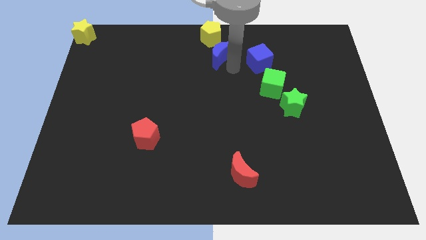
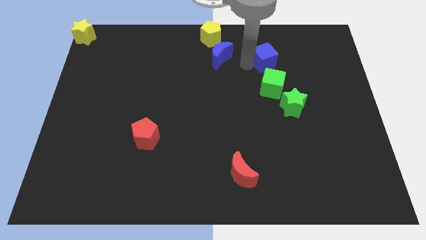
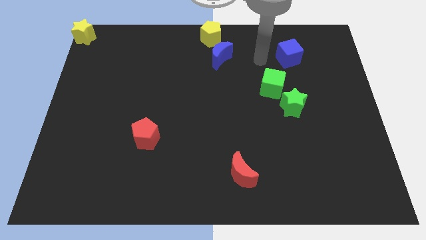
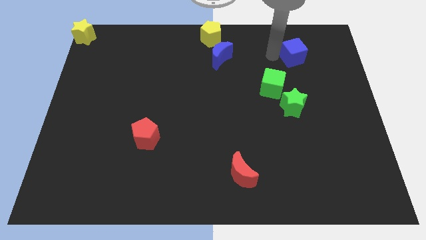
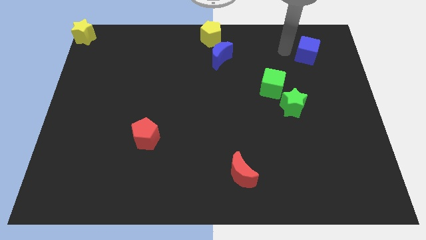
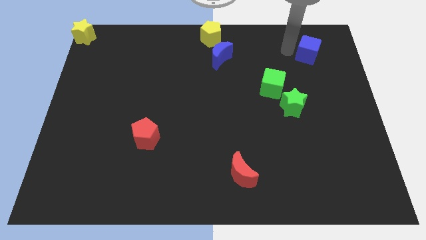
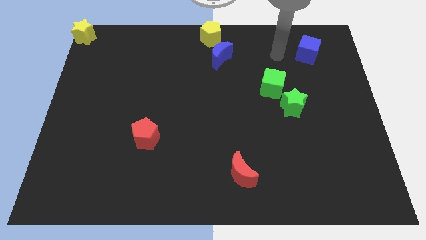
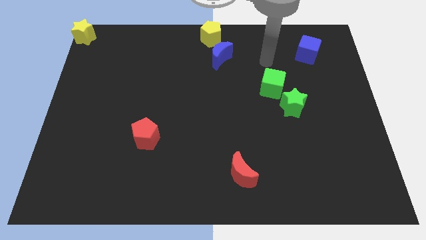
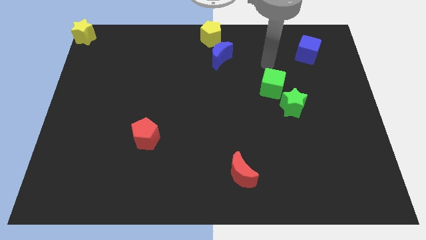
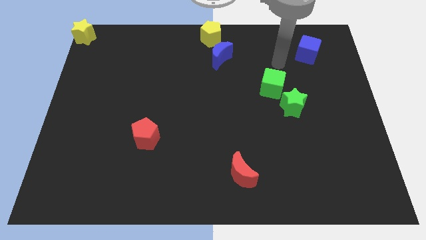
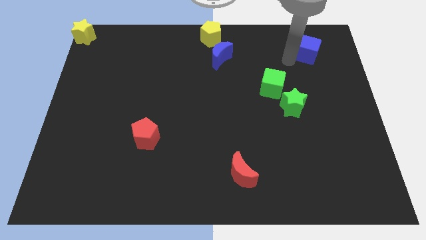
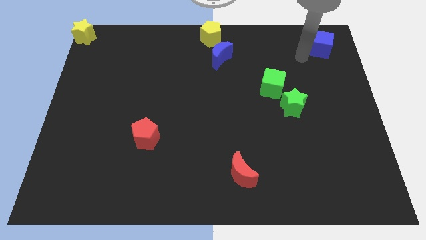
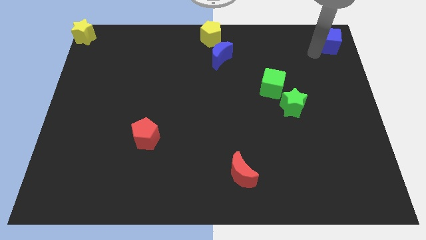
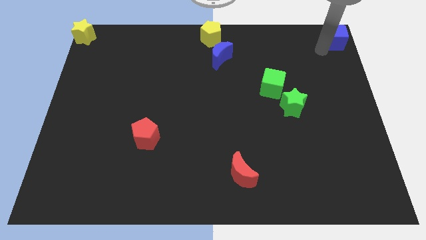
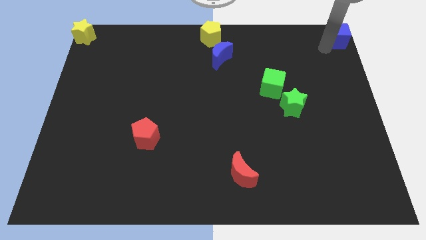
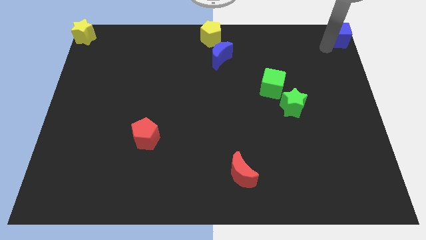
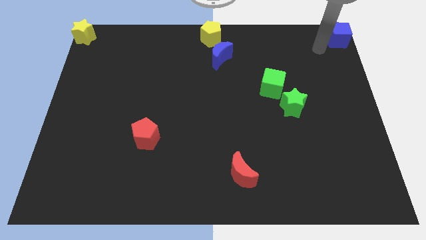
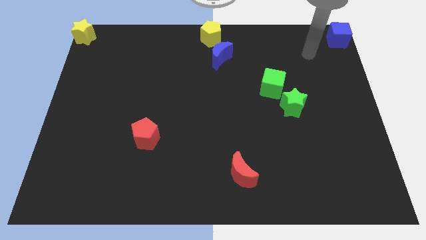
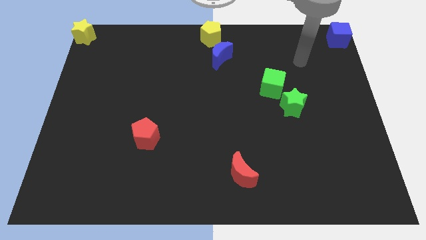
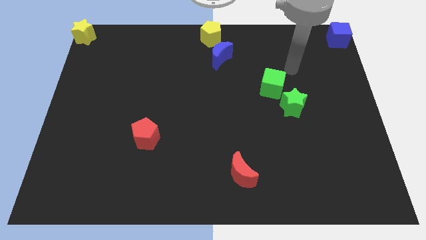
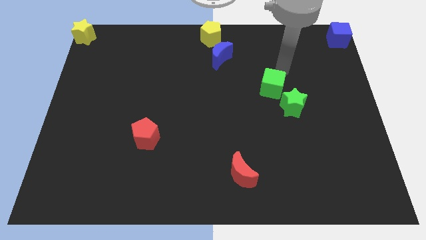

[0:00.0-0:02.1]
move the blue cube to the top right corner of the board

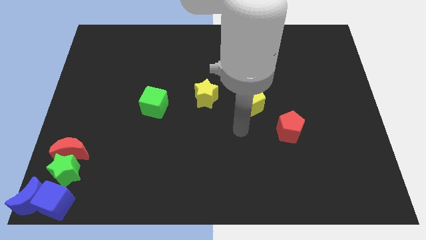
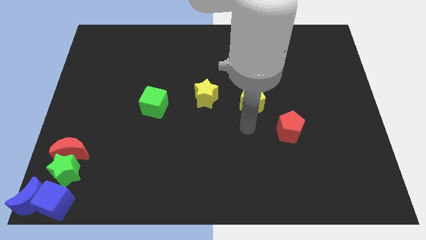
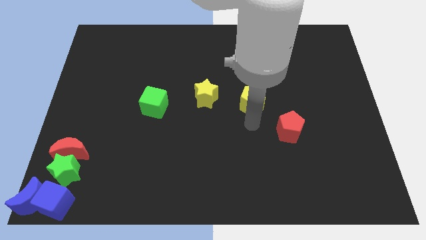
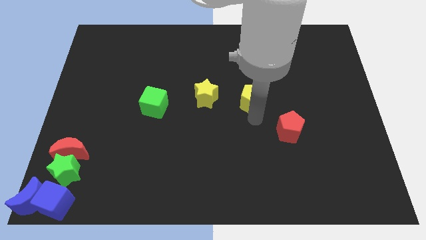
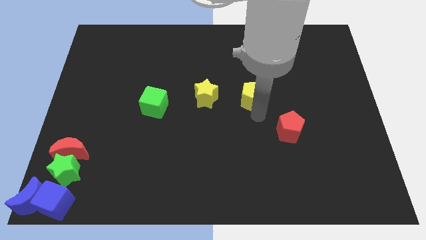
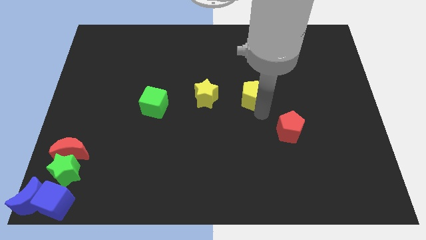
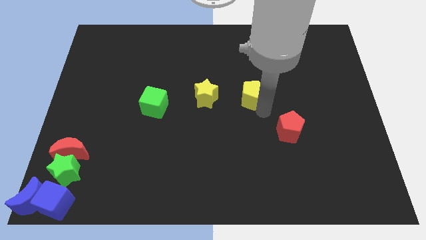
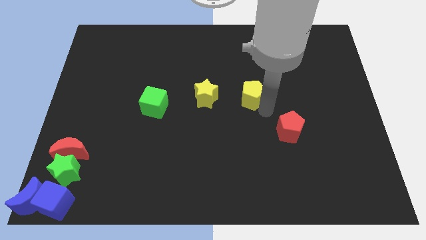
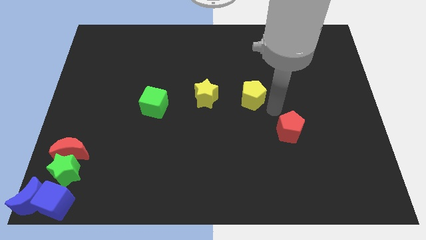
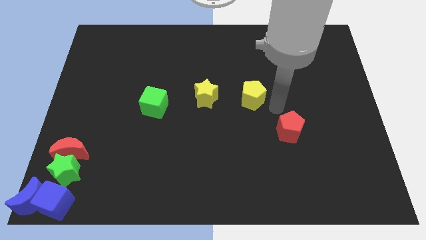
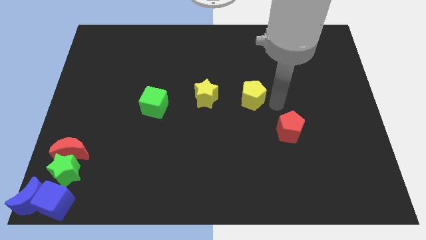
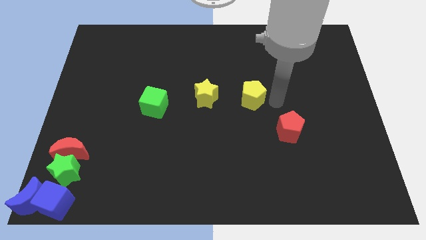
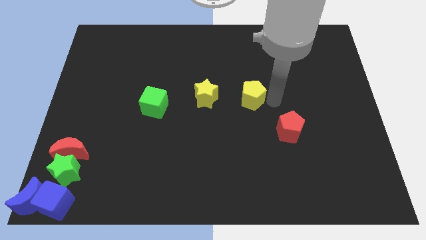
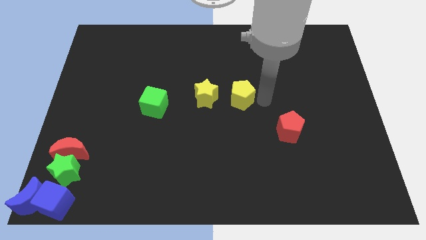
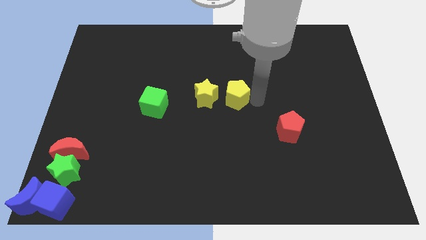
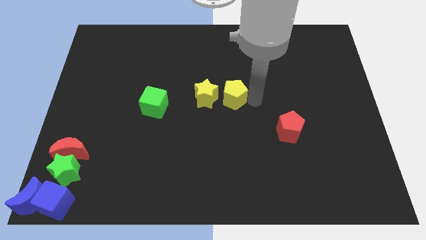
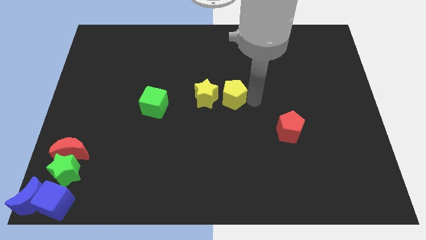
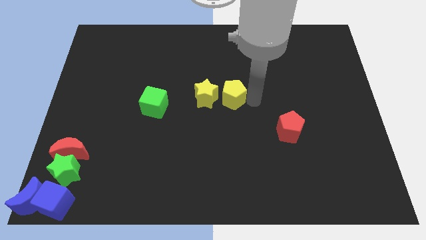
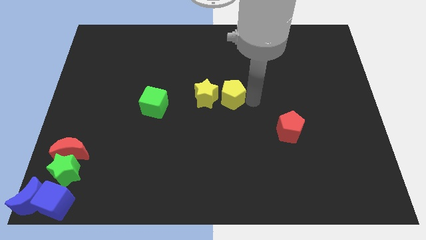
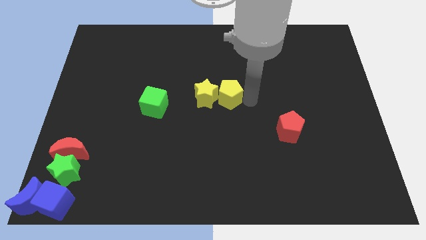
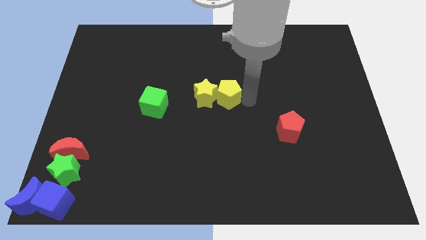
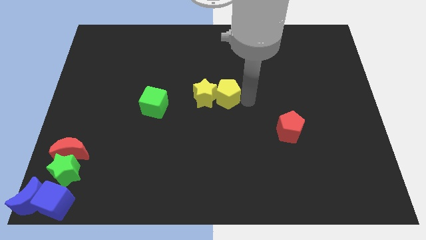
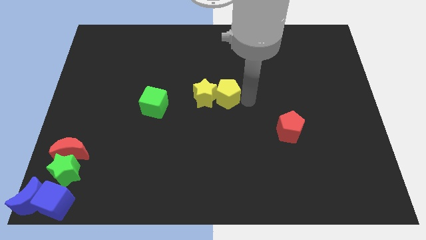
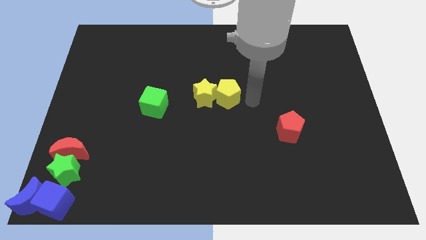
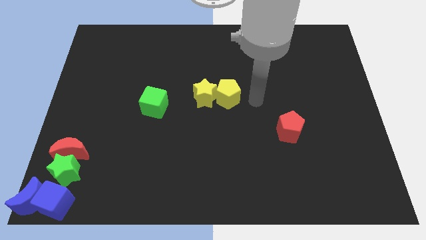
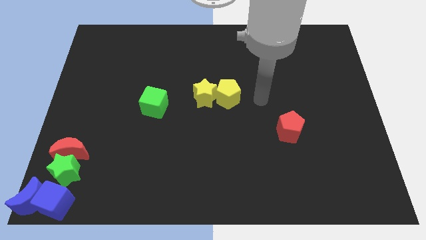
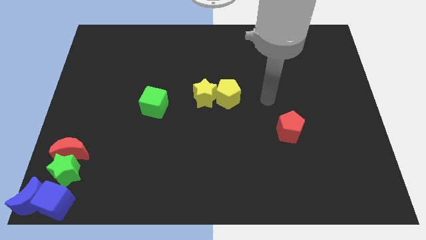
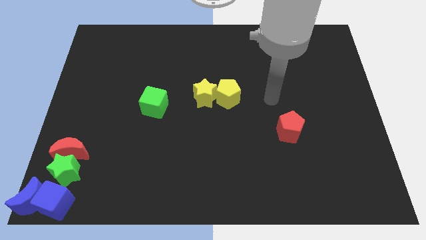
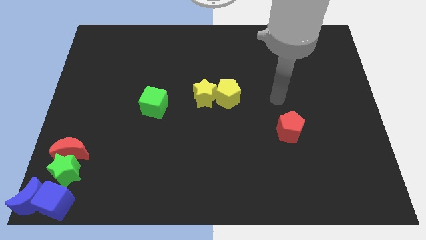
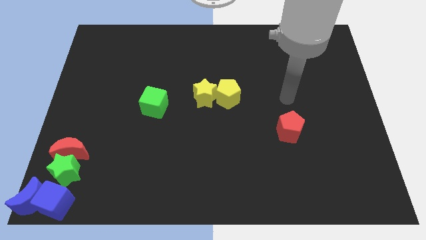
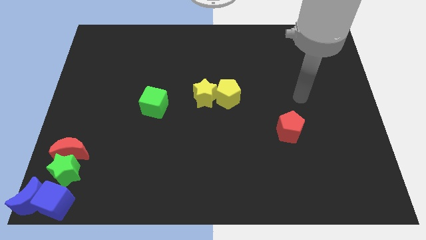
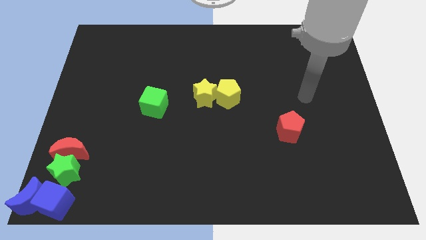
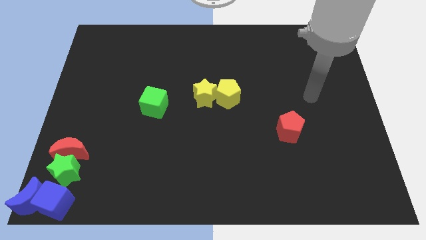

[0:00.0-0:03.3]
push the yellow pentagon into the yellow star

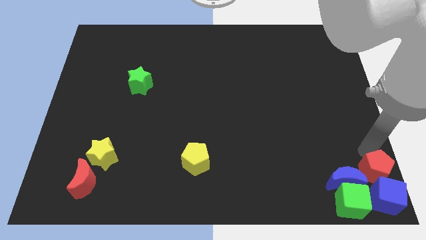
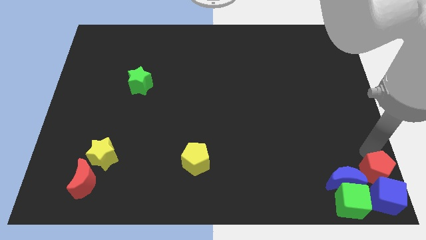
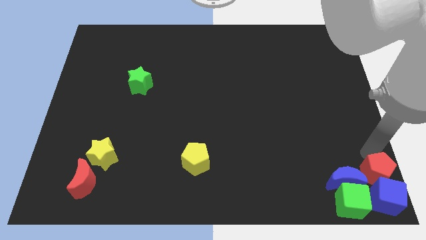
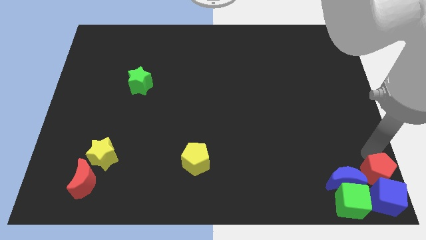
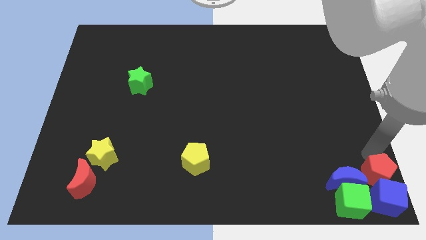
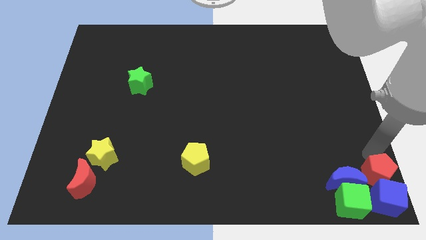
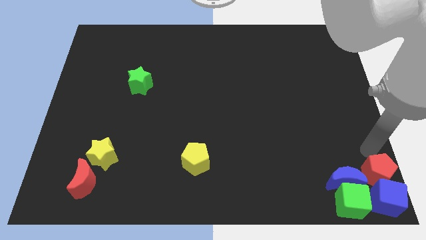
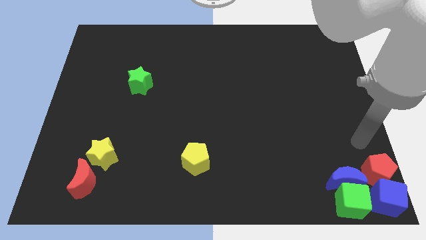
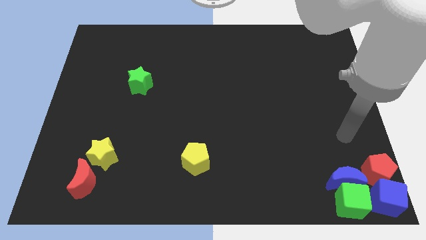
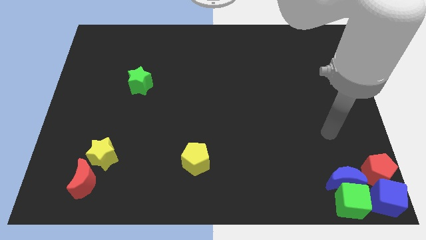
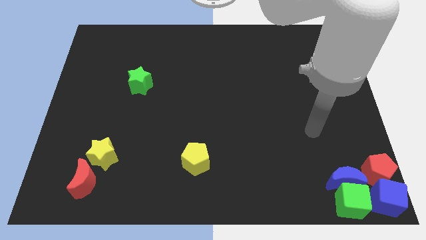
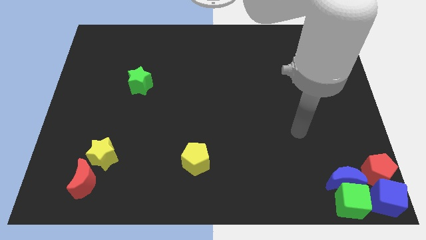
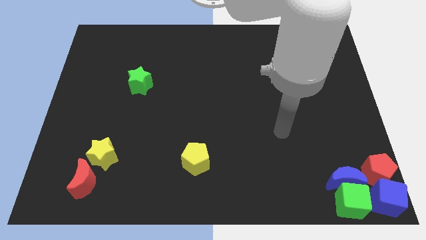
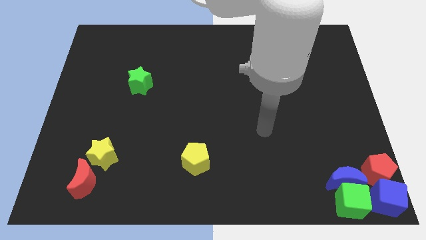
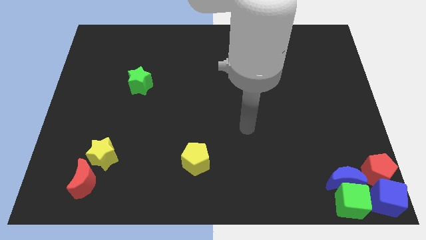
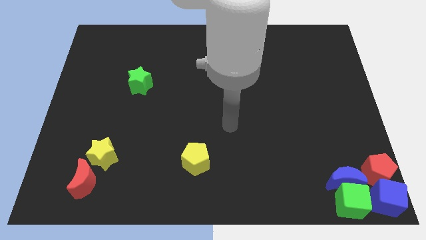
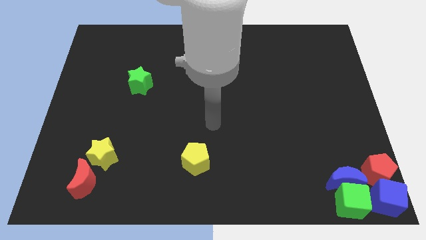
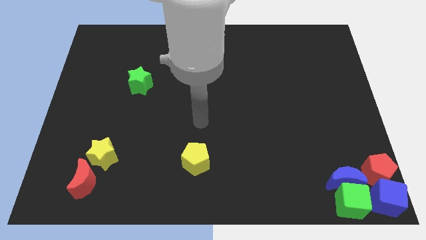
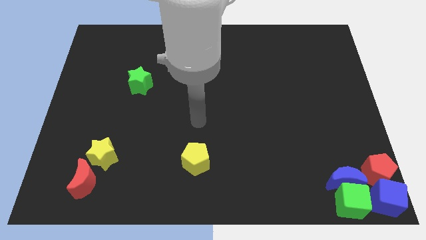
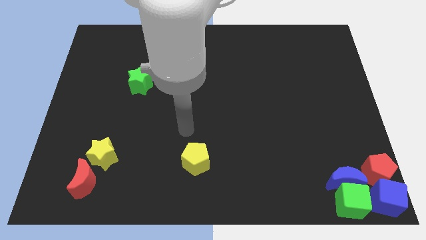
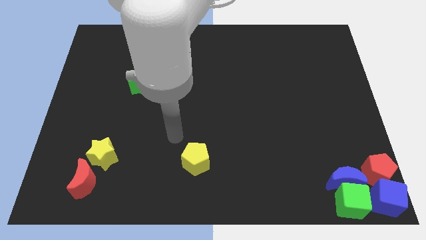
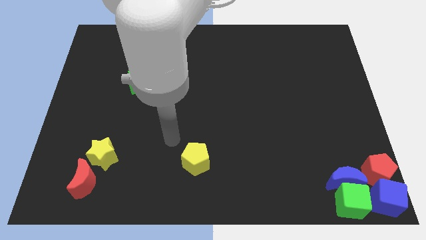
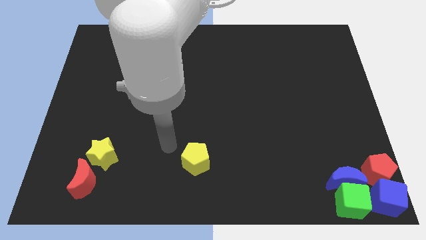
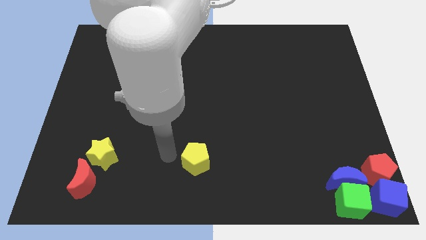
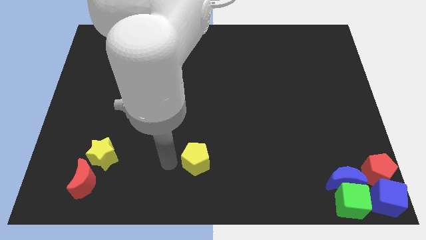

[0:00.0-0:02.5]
move the arm away from the red pentagon

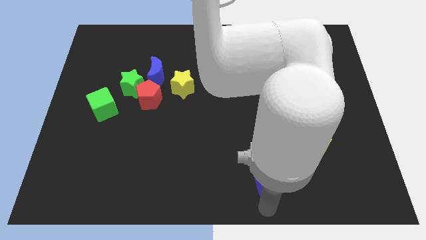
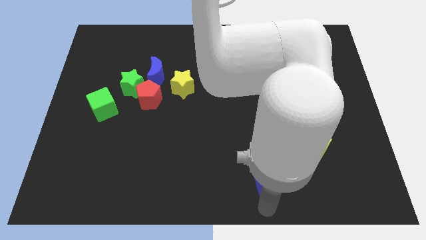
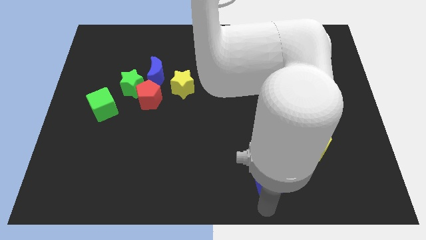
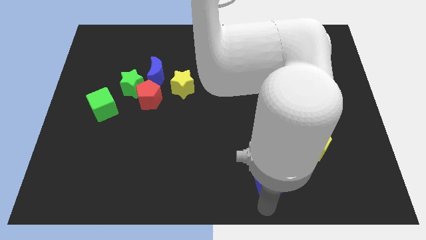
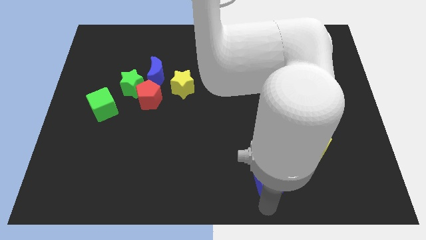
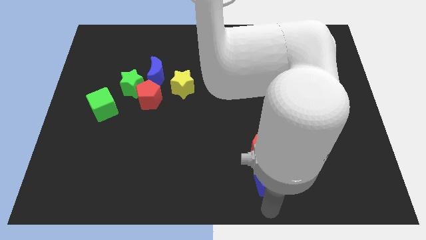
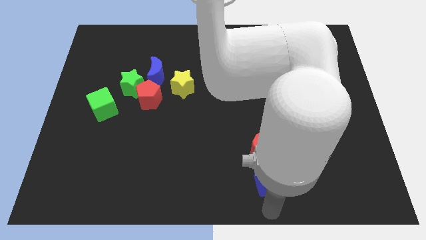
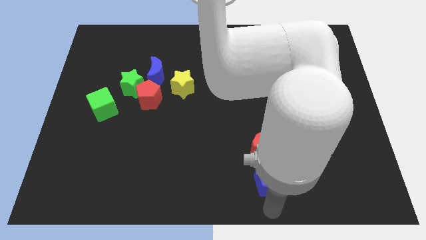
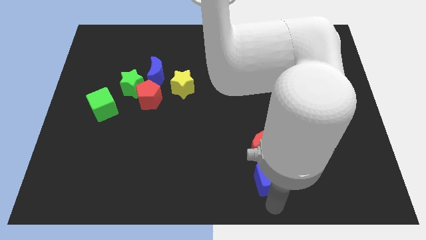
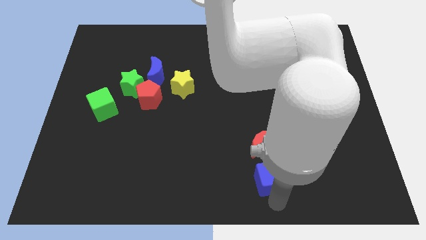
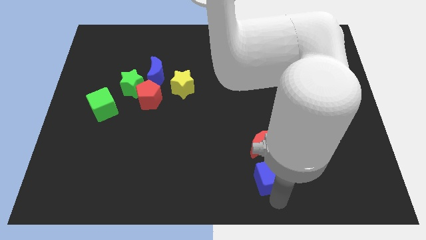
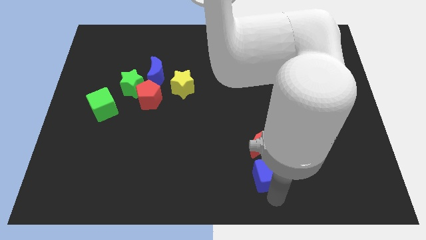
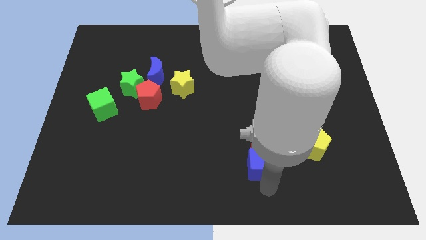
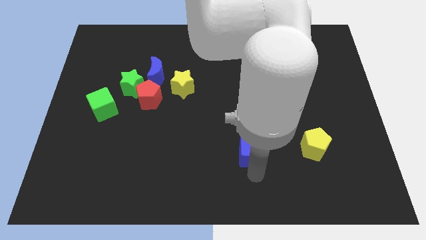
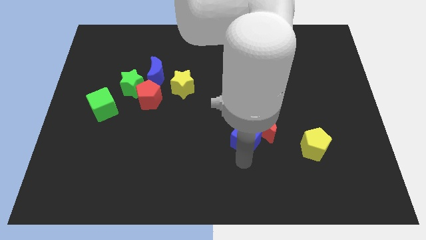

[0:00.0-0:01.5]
push the blue cube to the left side of the yellow pentagon
